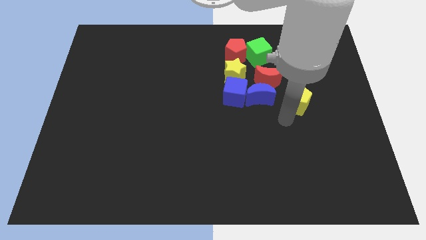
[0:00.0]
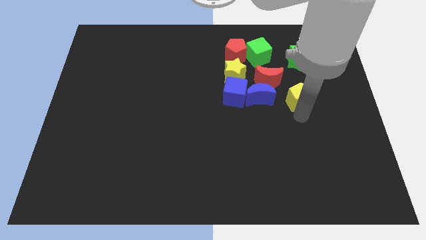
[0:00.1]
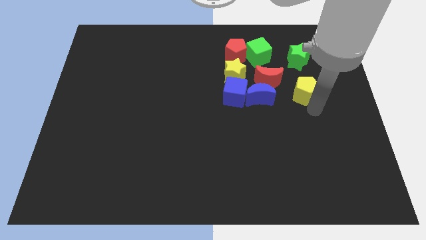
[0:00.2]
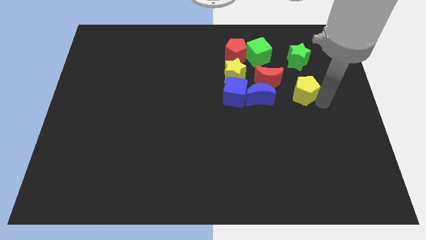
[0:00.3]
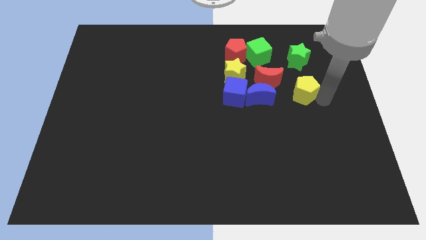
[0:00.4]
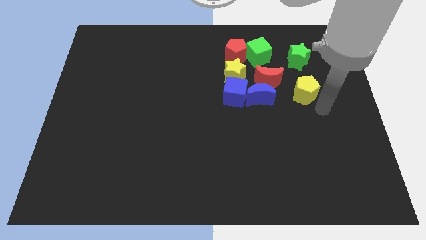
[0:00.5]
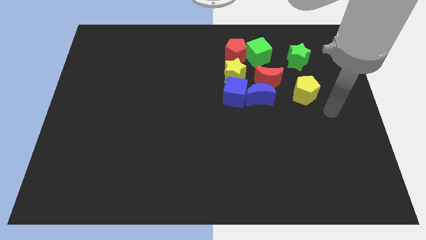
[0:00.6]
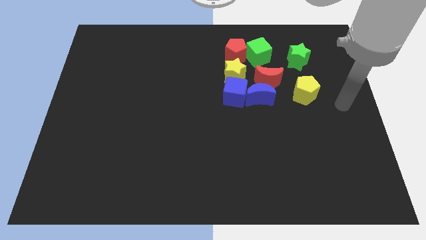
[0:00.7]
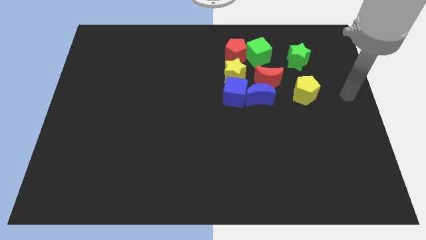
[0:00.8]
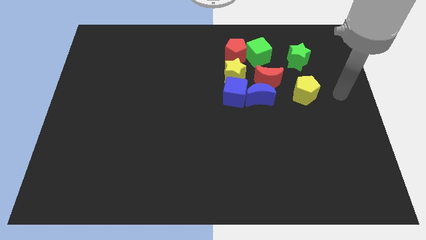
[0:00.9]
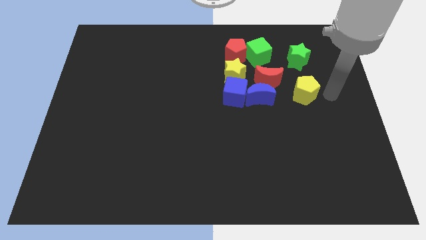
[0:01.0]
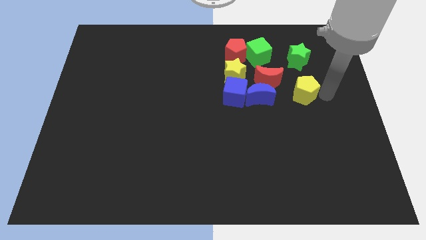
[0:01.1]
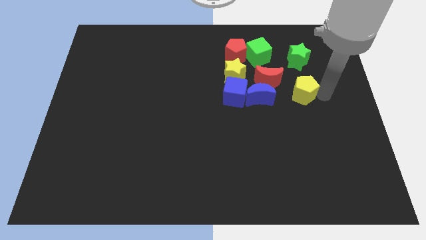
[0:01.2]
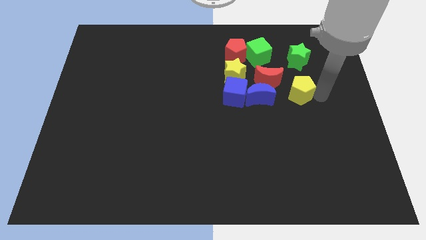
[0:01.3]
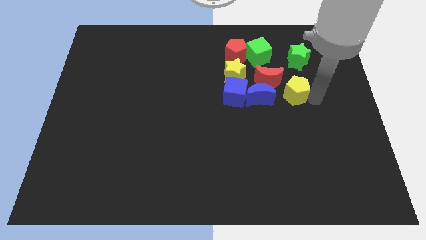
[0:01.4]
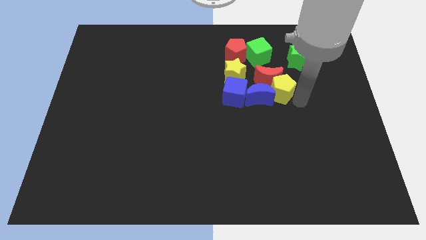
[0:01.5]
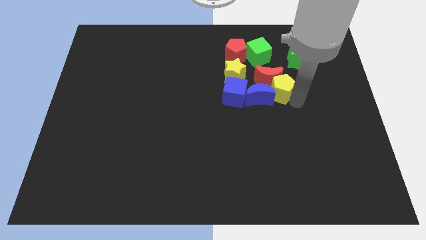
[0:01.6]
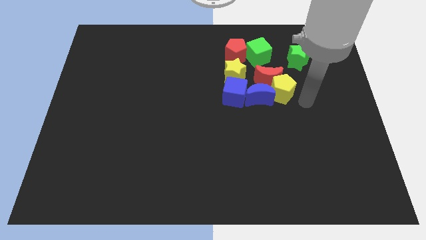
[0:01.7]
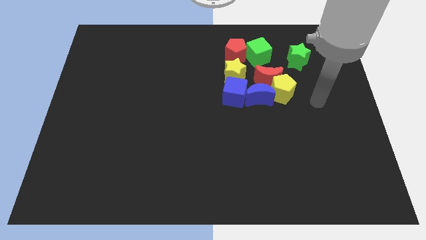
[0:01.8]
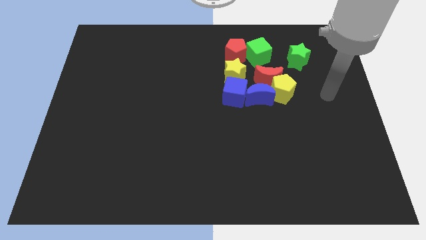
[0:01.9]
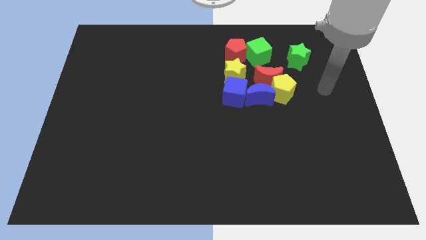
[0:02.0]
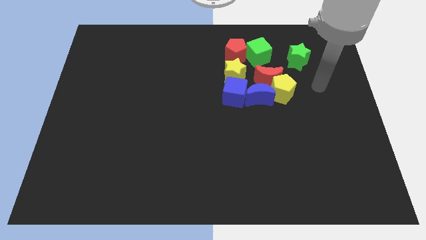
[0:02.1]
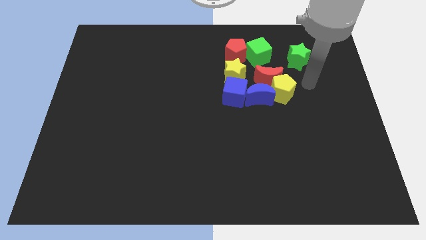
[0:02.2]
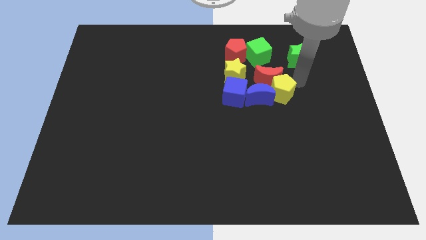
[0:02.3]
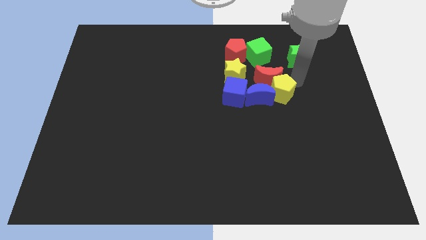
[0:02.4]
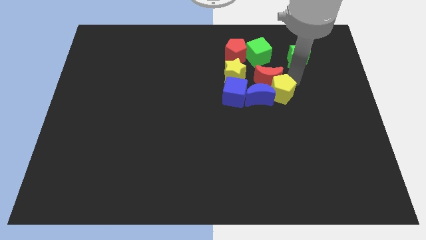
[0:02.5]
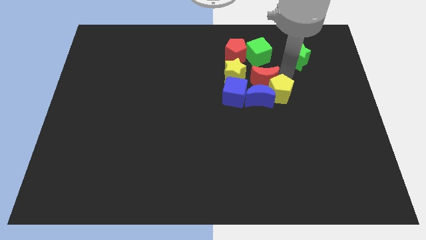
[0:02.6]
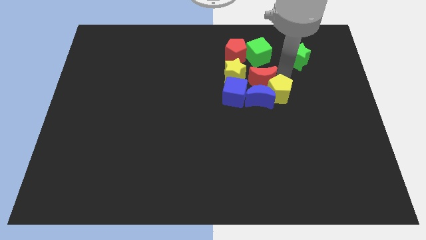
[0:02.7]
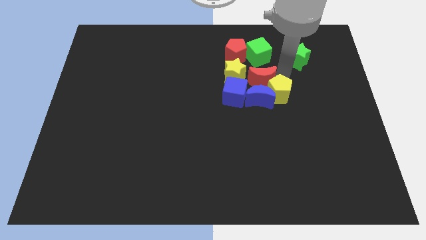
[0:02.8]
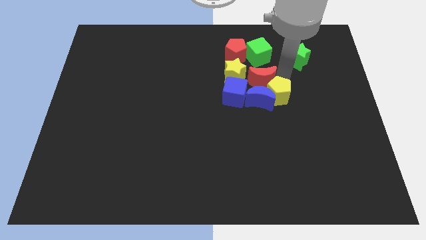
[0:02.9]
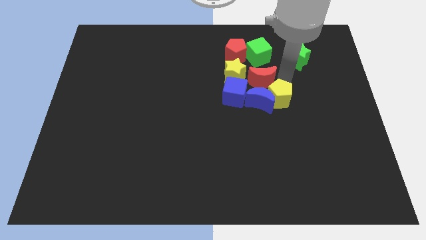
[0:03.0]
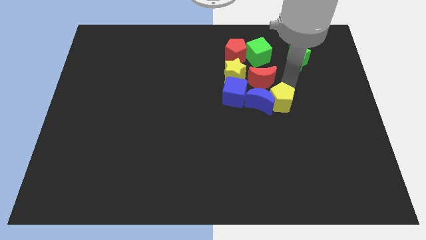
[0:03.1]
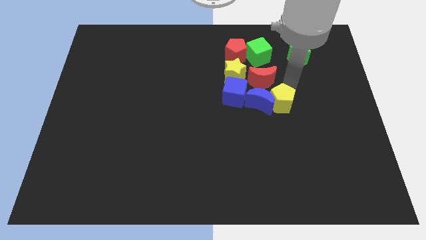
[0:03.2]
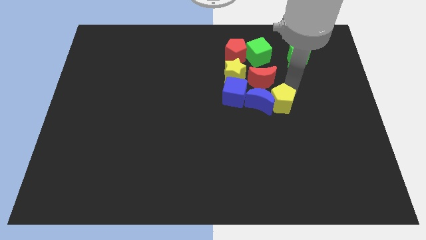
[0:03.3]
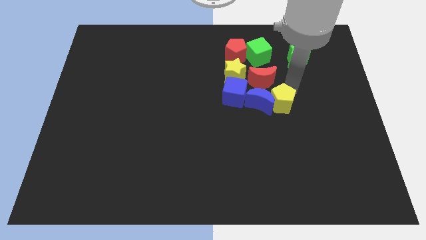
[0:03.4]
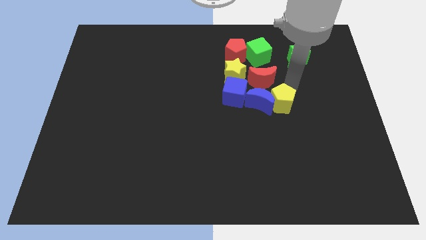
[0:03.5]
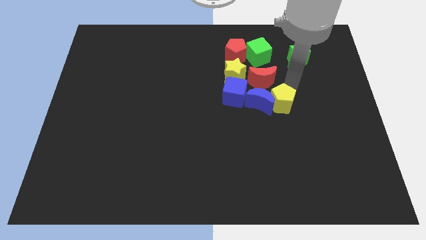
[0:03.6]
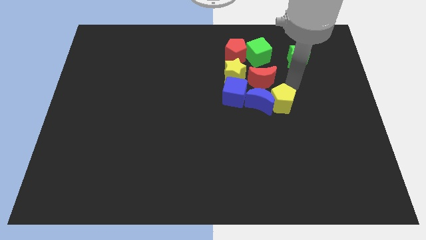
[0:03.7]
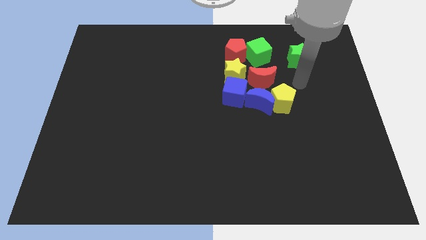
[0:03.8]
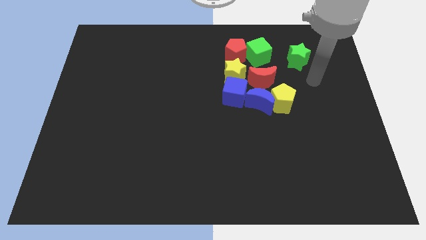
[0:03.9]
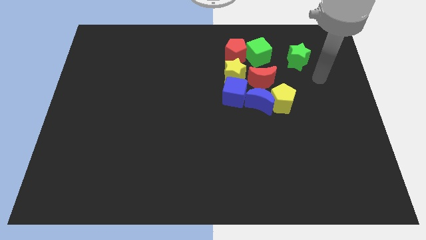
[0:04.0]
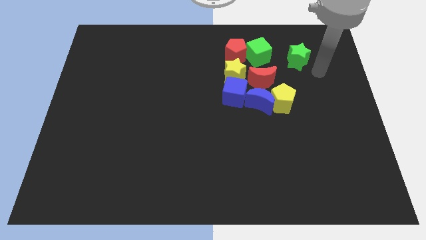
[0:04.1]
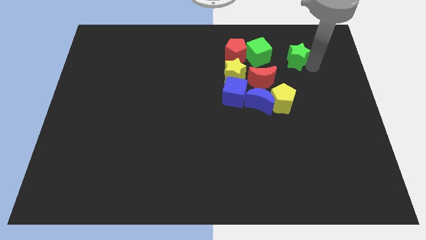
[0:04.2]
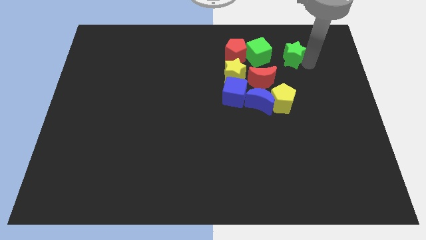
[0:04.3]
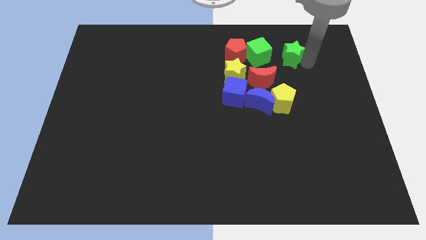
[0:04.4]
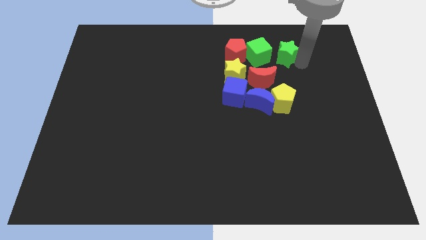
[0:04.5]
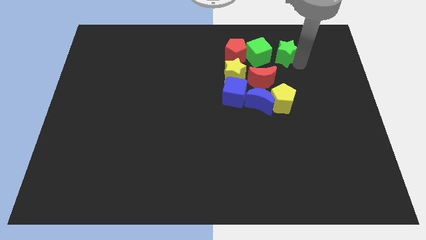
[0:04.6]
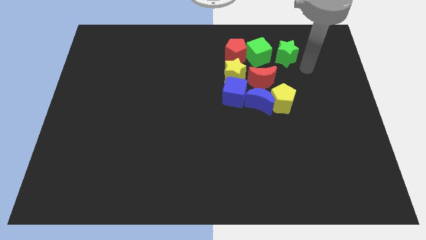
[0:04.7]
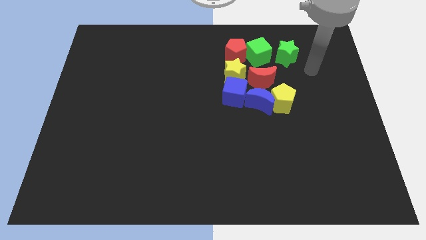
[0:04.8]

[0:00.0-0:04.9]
push the yellow pentagon into the blue crescent

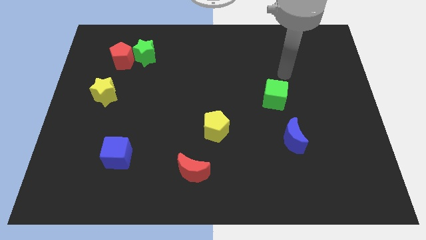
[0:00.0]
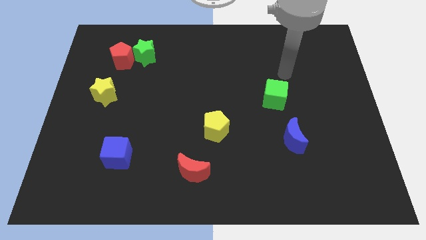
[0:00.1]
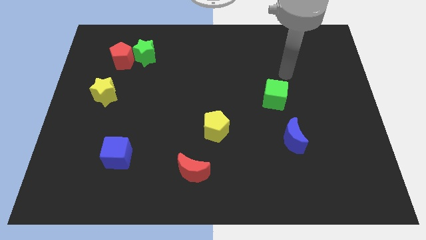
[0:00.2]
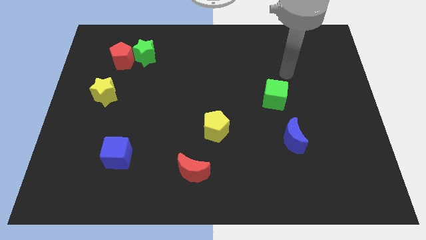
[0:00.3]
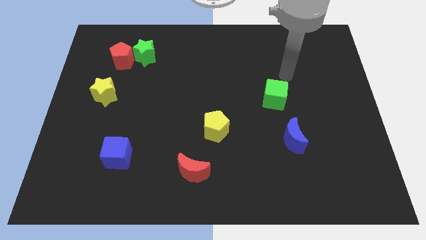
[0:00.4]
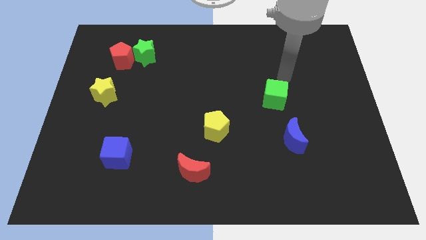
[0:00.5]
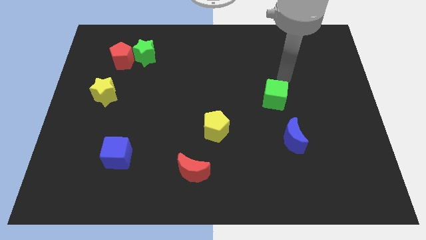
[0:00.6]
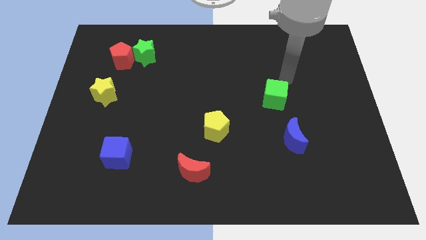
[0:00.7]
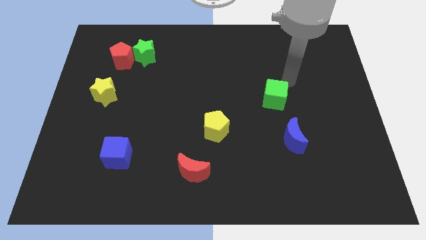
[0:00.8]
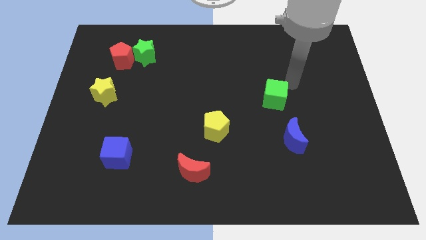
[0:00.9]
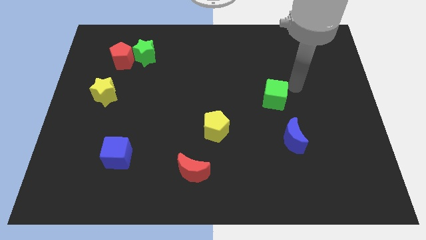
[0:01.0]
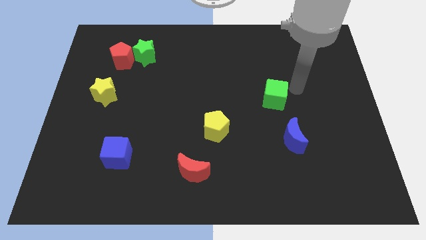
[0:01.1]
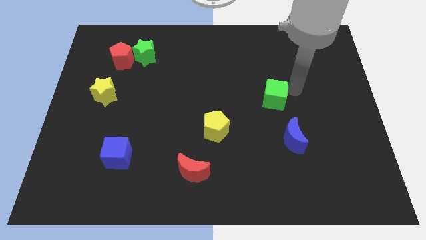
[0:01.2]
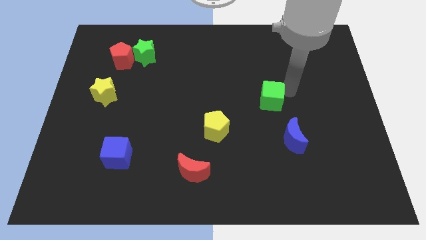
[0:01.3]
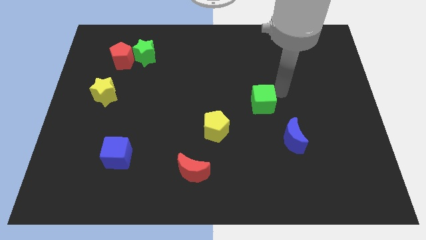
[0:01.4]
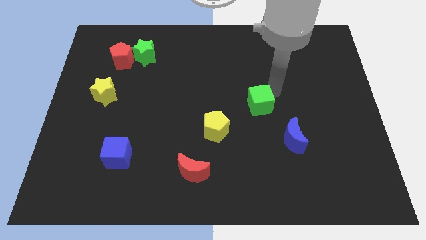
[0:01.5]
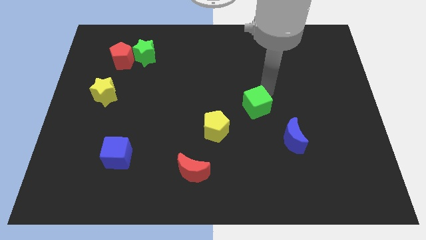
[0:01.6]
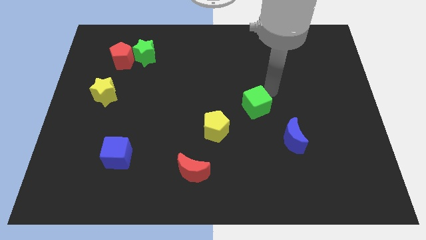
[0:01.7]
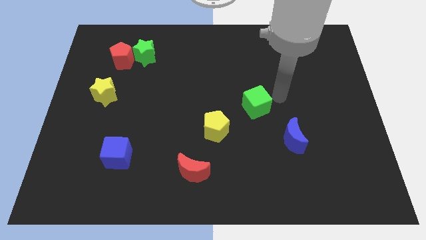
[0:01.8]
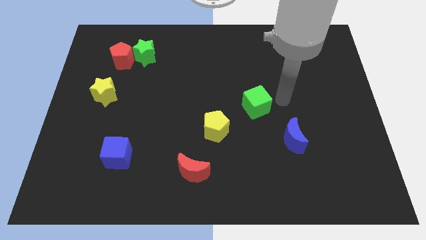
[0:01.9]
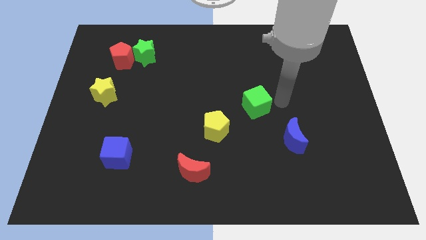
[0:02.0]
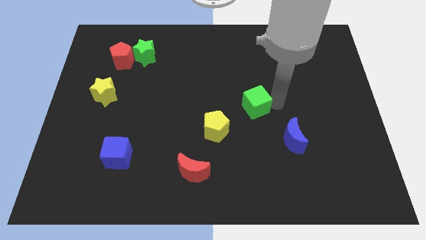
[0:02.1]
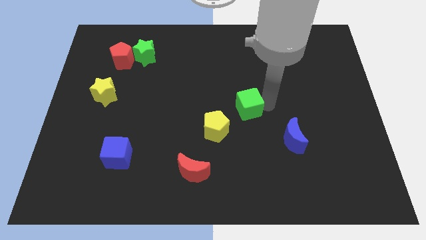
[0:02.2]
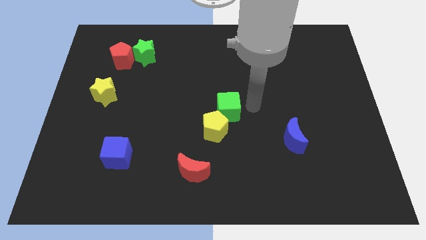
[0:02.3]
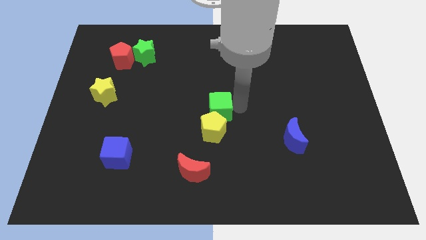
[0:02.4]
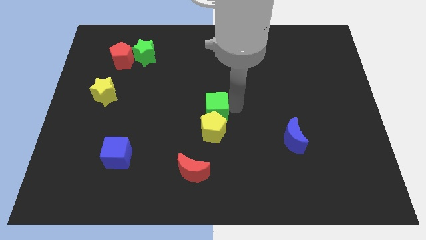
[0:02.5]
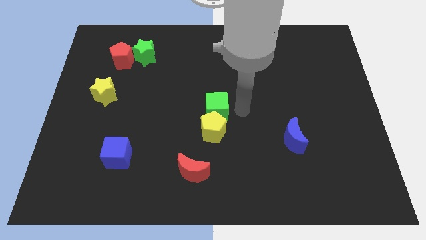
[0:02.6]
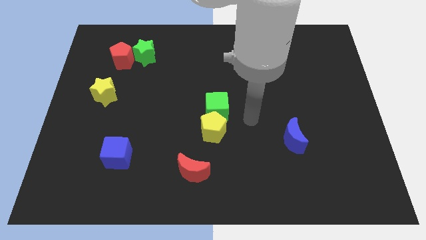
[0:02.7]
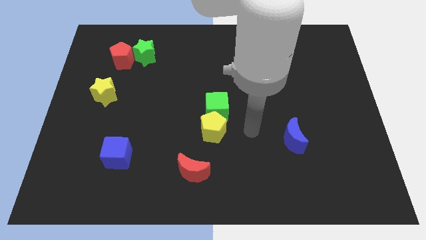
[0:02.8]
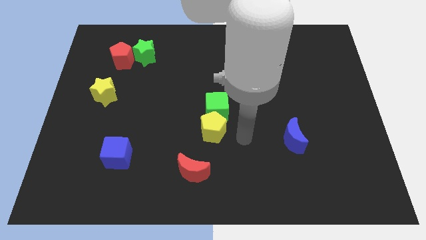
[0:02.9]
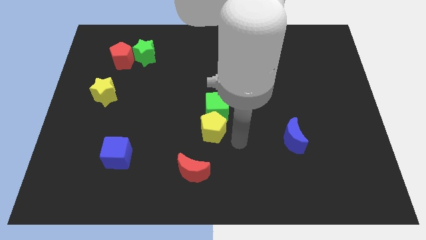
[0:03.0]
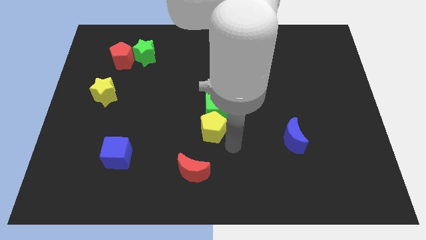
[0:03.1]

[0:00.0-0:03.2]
place the green cube above the yellow pentagon

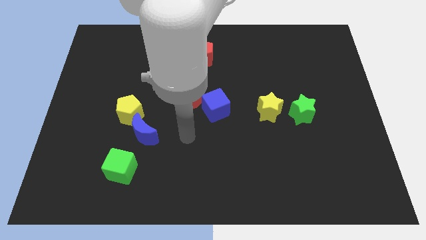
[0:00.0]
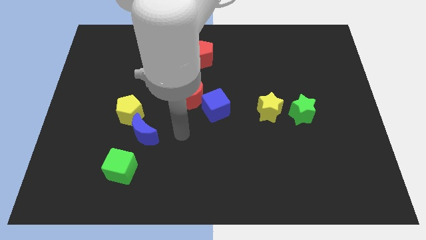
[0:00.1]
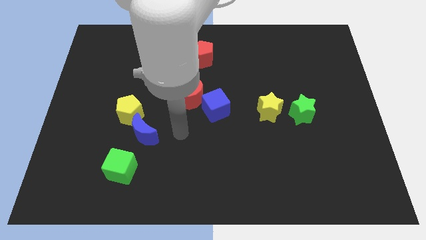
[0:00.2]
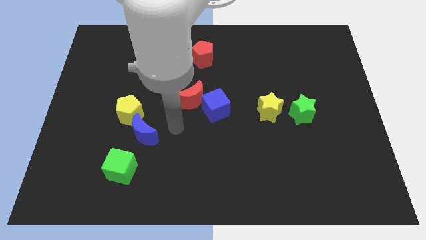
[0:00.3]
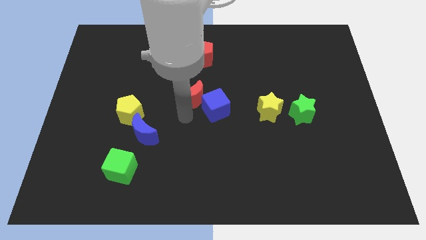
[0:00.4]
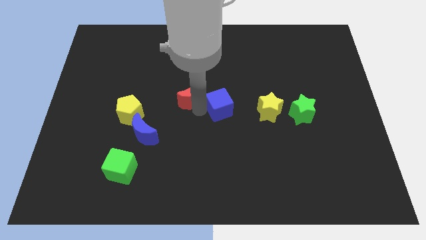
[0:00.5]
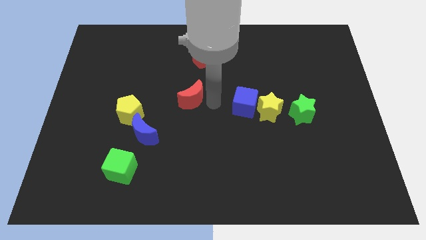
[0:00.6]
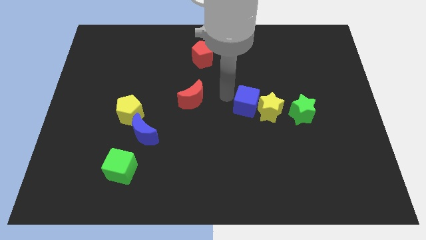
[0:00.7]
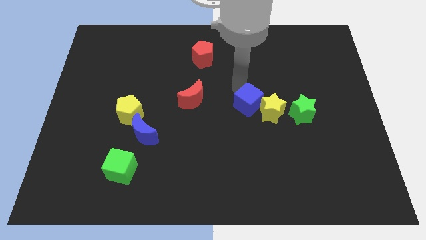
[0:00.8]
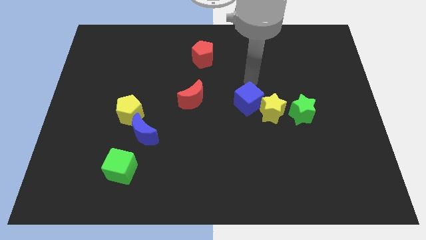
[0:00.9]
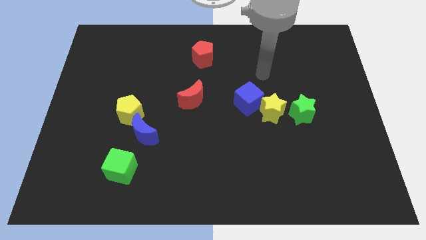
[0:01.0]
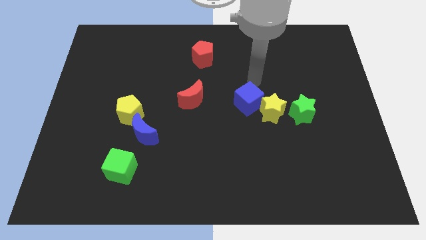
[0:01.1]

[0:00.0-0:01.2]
move the blue cube into the yellow star
